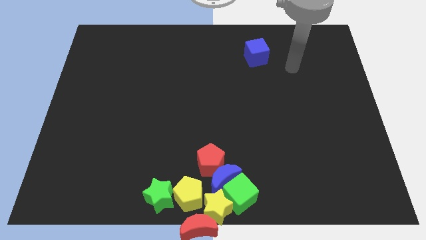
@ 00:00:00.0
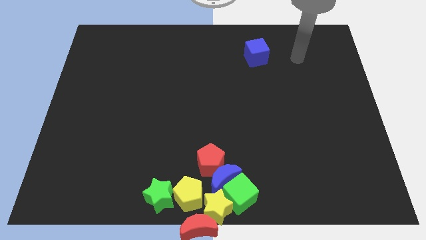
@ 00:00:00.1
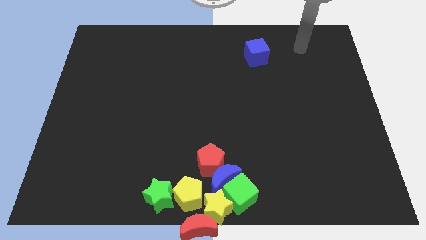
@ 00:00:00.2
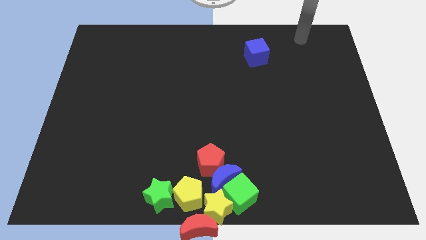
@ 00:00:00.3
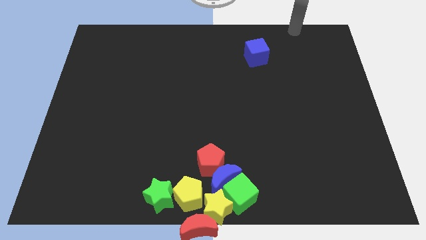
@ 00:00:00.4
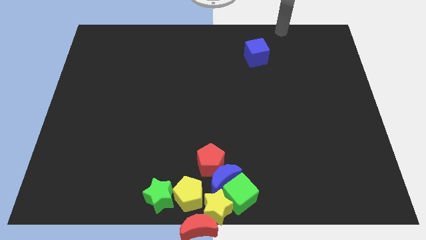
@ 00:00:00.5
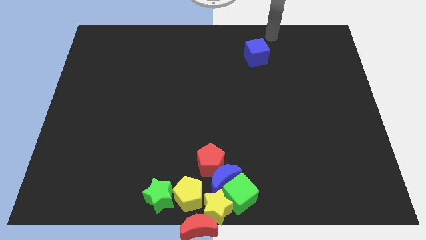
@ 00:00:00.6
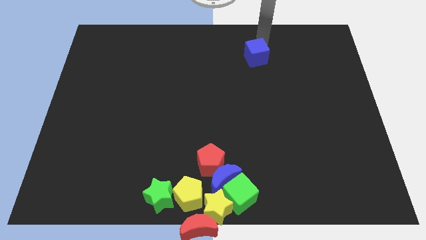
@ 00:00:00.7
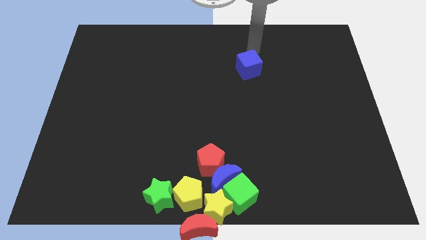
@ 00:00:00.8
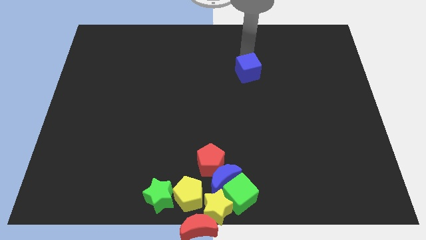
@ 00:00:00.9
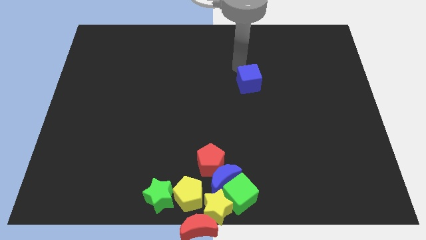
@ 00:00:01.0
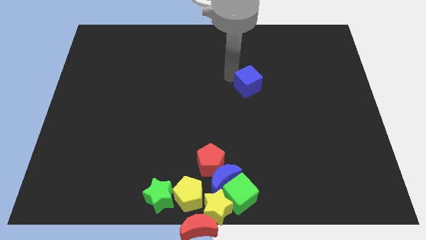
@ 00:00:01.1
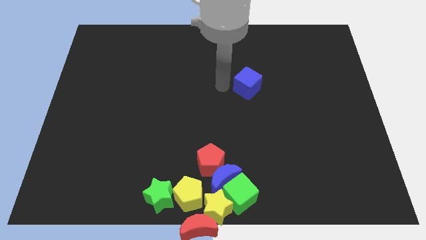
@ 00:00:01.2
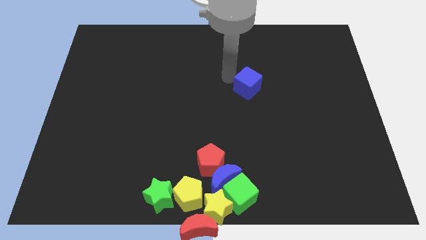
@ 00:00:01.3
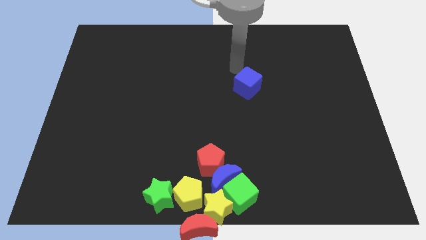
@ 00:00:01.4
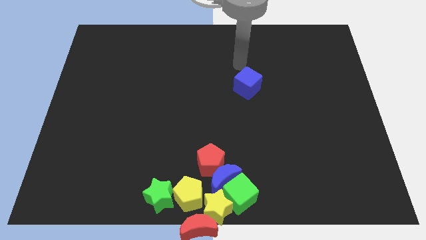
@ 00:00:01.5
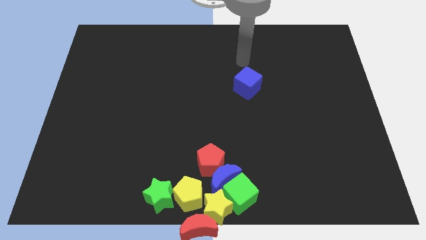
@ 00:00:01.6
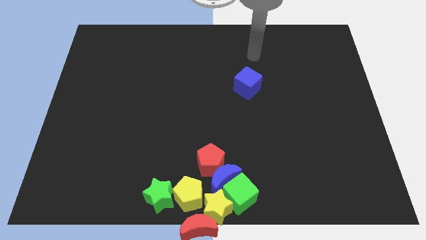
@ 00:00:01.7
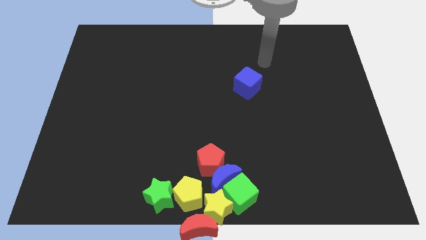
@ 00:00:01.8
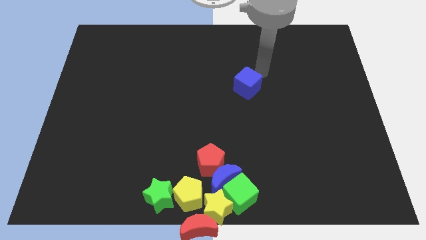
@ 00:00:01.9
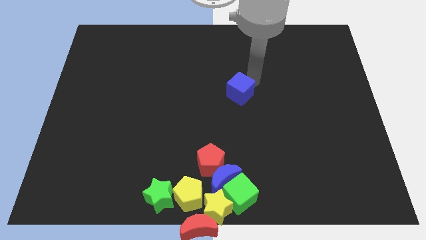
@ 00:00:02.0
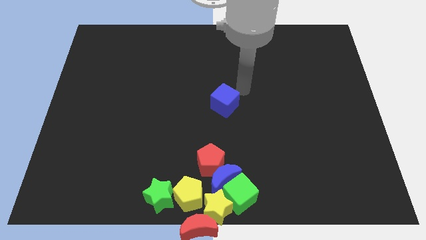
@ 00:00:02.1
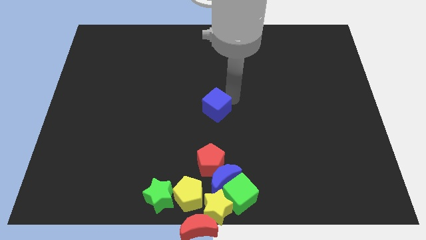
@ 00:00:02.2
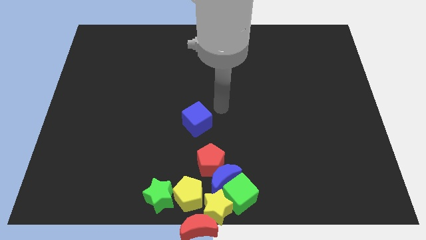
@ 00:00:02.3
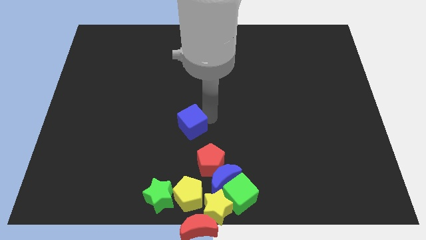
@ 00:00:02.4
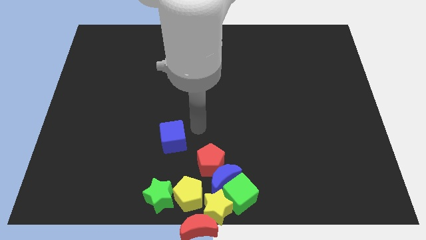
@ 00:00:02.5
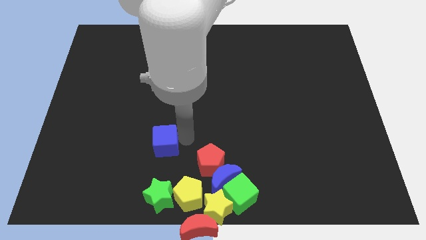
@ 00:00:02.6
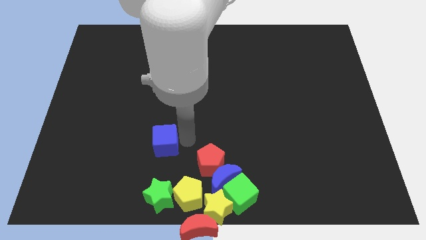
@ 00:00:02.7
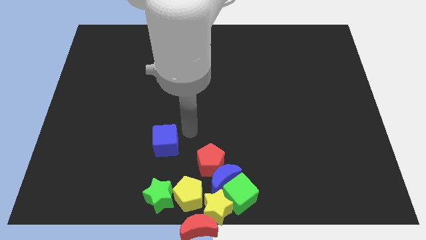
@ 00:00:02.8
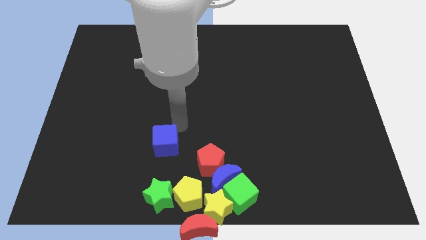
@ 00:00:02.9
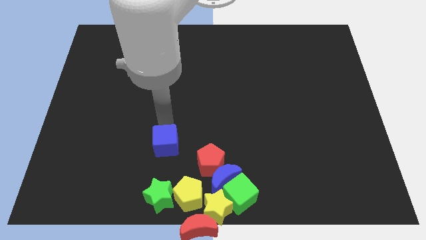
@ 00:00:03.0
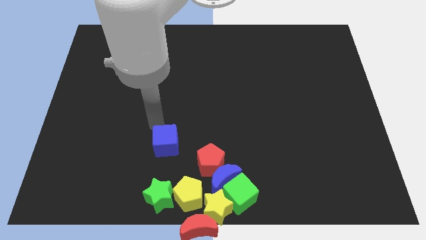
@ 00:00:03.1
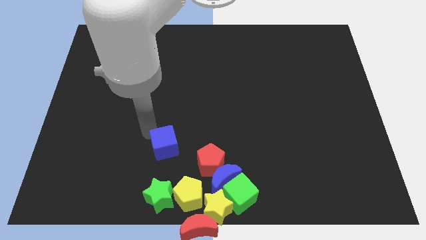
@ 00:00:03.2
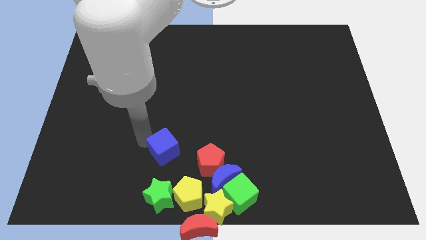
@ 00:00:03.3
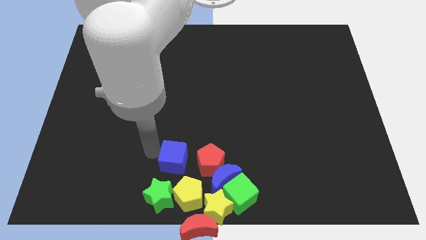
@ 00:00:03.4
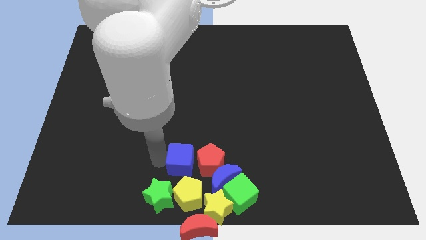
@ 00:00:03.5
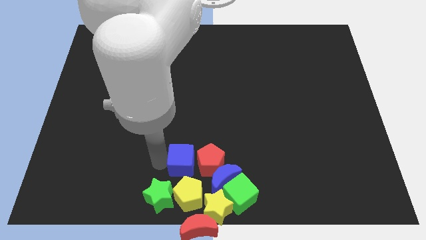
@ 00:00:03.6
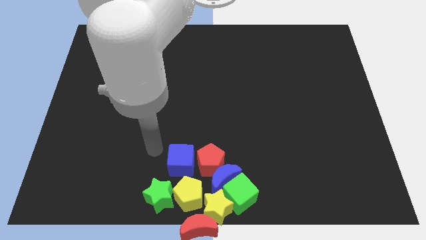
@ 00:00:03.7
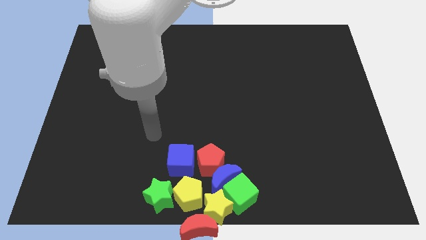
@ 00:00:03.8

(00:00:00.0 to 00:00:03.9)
place the blue cube at the top of yellow pentagon

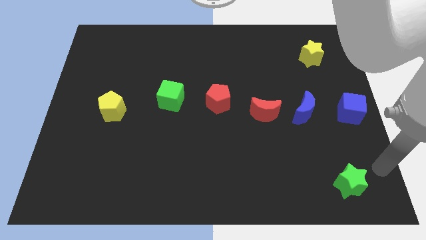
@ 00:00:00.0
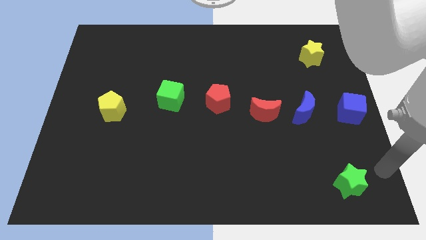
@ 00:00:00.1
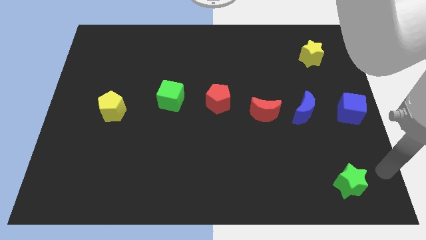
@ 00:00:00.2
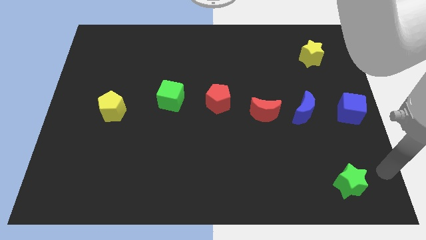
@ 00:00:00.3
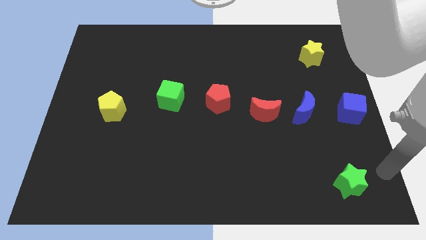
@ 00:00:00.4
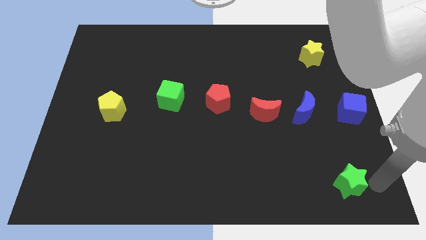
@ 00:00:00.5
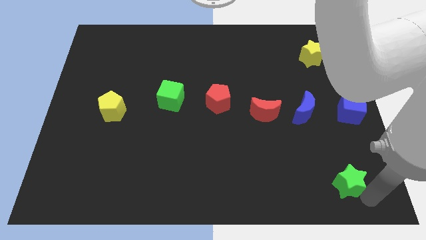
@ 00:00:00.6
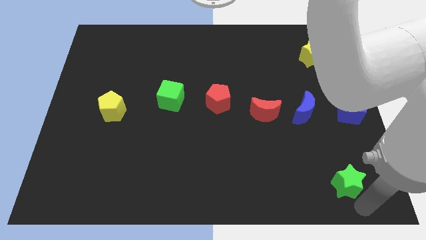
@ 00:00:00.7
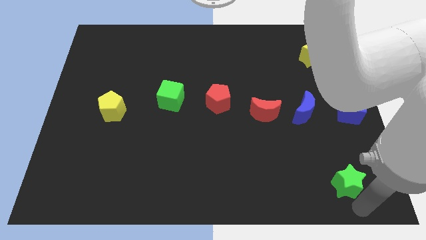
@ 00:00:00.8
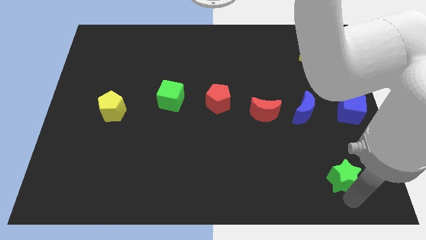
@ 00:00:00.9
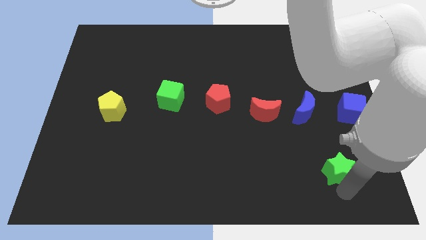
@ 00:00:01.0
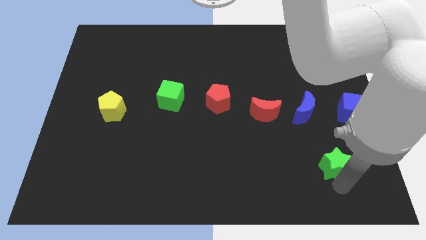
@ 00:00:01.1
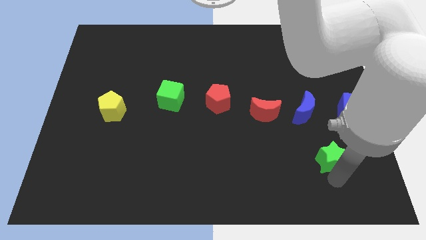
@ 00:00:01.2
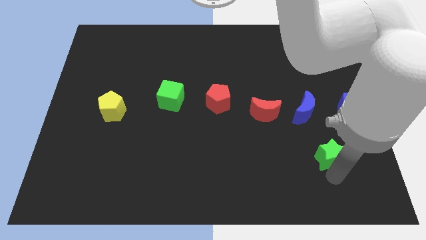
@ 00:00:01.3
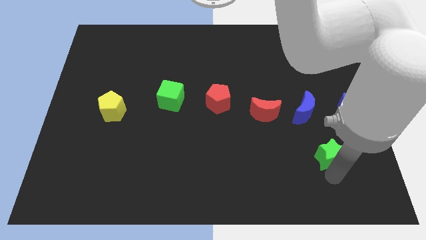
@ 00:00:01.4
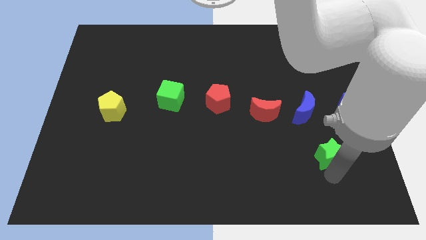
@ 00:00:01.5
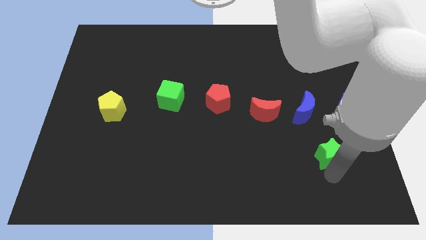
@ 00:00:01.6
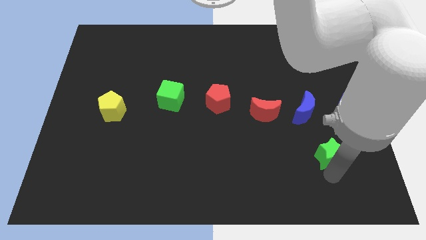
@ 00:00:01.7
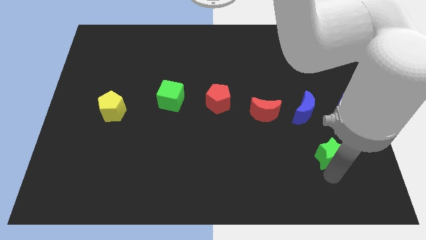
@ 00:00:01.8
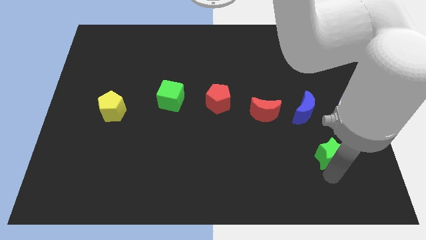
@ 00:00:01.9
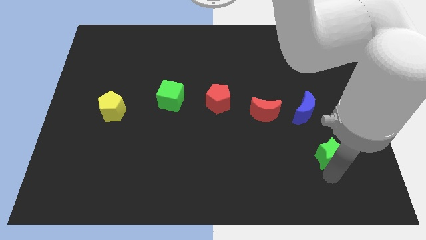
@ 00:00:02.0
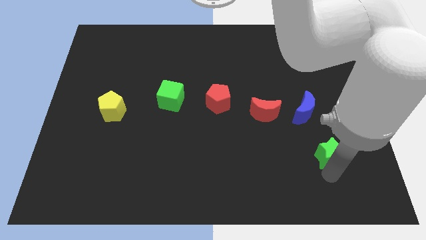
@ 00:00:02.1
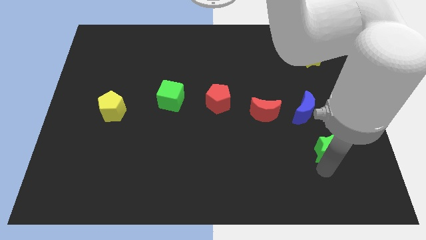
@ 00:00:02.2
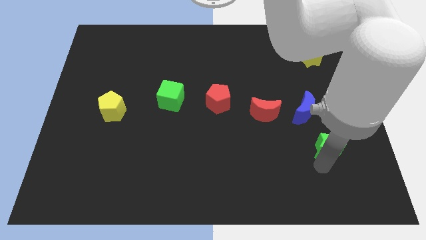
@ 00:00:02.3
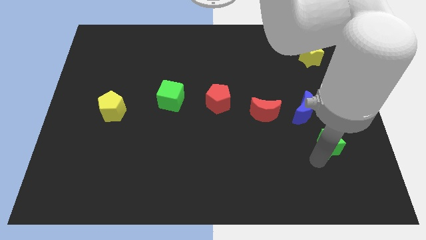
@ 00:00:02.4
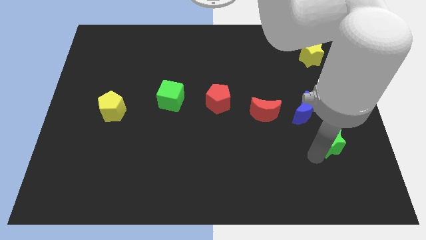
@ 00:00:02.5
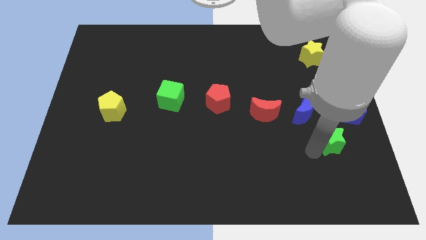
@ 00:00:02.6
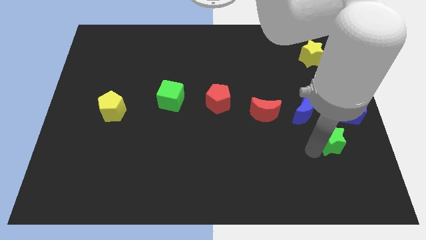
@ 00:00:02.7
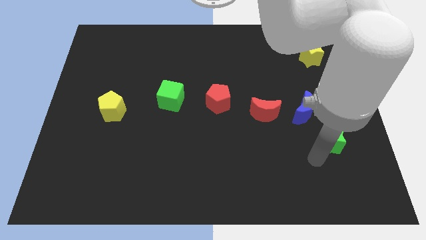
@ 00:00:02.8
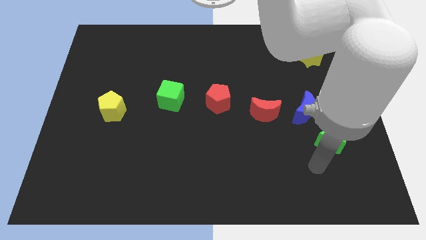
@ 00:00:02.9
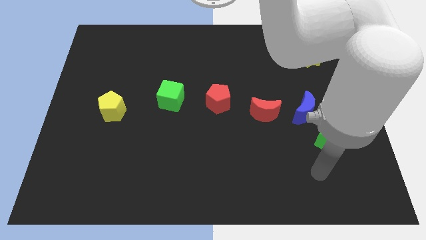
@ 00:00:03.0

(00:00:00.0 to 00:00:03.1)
slide green star to the right bottom of blue moon

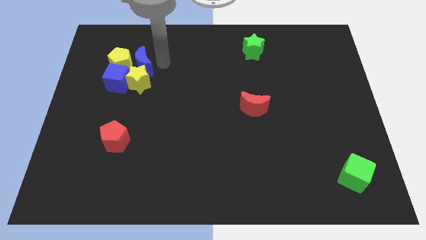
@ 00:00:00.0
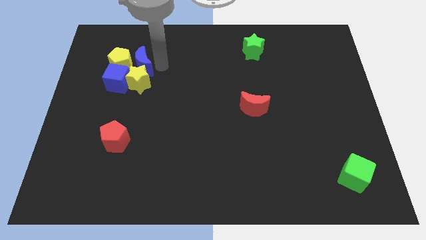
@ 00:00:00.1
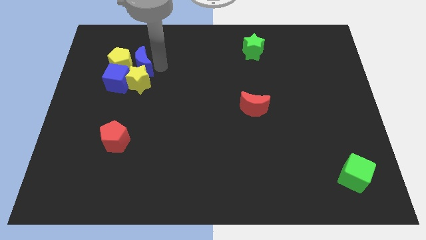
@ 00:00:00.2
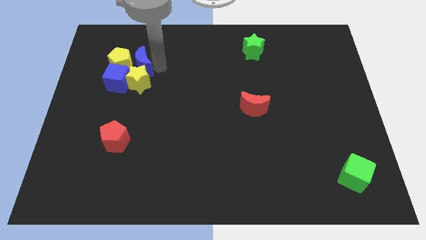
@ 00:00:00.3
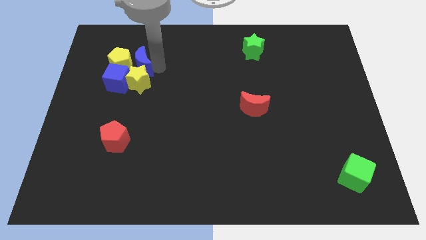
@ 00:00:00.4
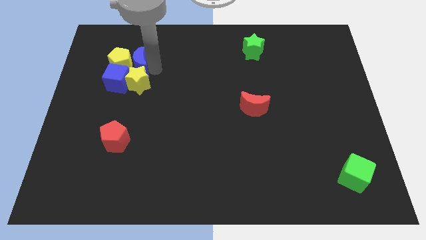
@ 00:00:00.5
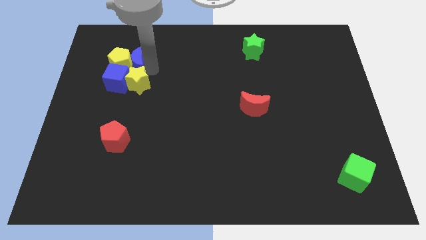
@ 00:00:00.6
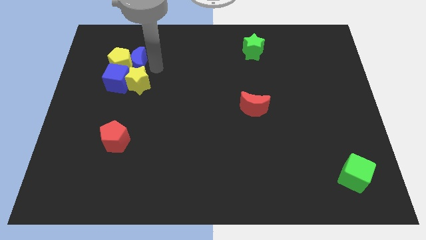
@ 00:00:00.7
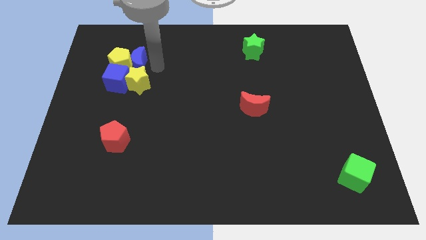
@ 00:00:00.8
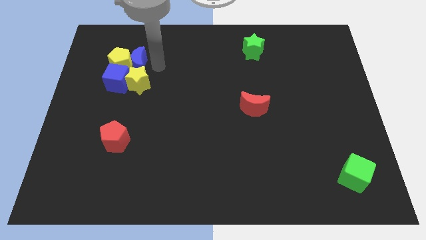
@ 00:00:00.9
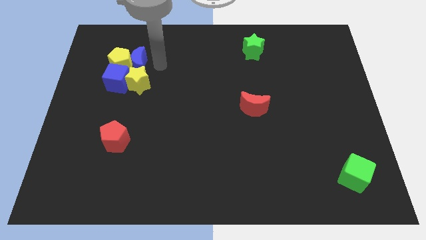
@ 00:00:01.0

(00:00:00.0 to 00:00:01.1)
slide blue moon into yellow pentagon

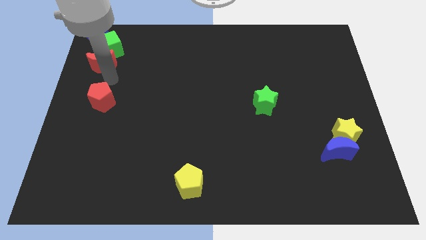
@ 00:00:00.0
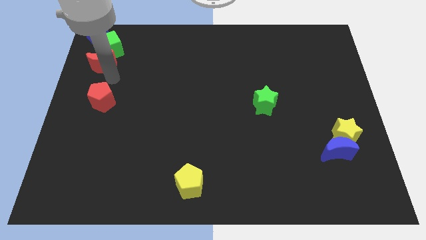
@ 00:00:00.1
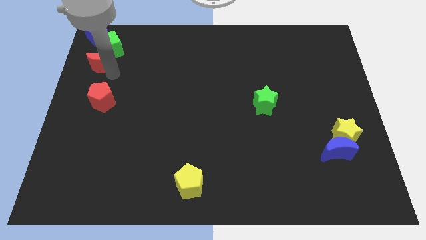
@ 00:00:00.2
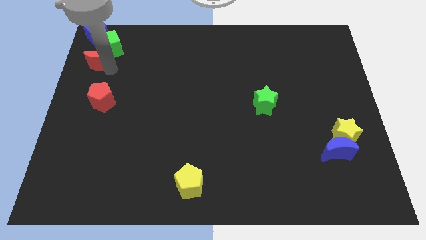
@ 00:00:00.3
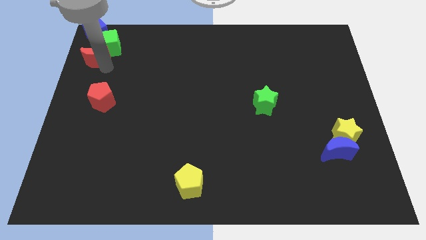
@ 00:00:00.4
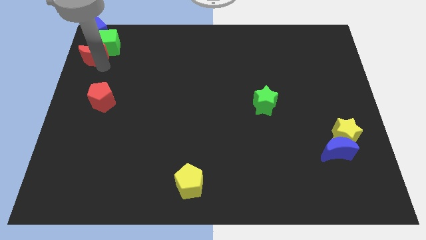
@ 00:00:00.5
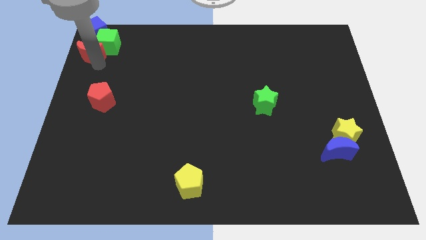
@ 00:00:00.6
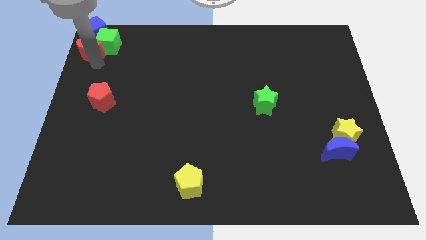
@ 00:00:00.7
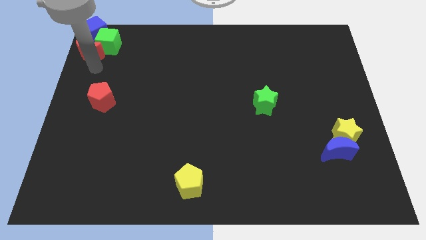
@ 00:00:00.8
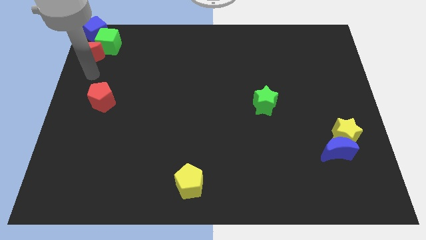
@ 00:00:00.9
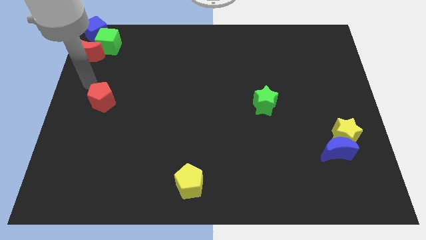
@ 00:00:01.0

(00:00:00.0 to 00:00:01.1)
move red crescent into green cube
